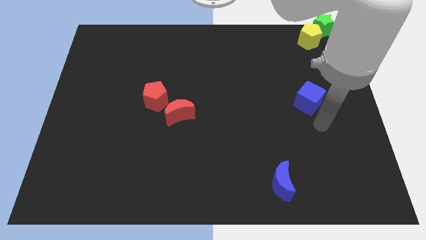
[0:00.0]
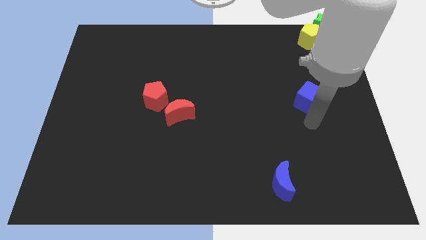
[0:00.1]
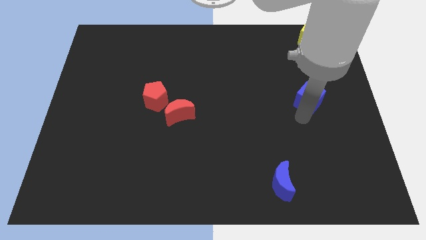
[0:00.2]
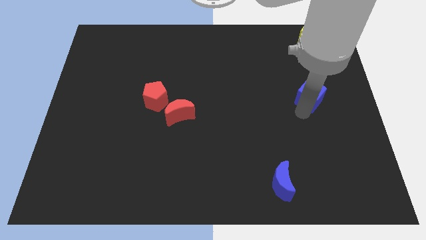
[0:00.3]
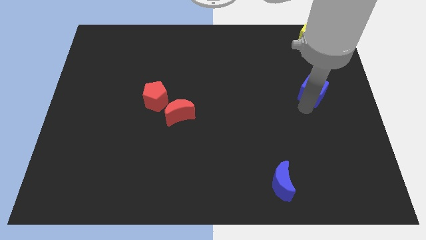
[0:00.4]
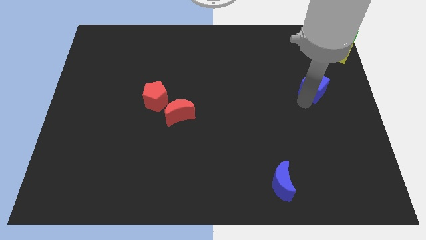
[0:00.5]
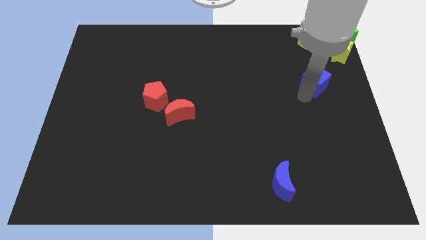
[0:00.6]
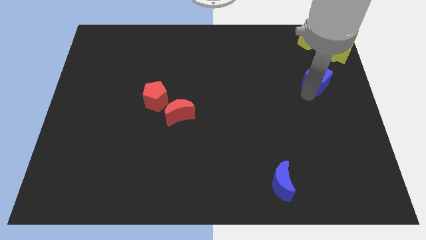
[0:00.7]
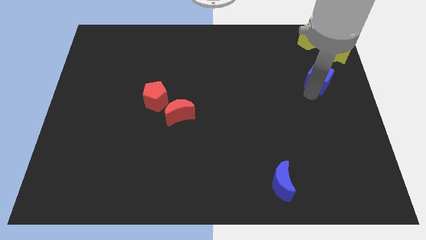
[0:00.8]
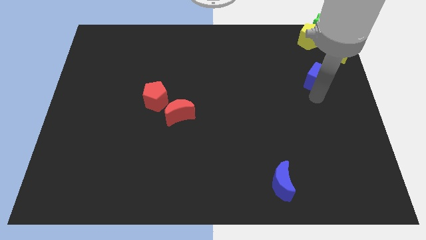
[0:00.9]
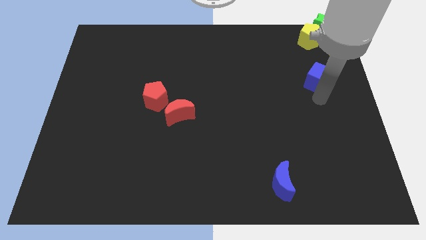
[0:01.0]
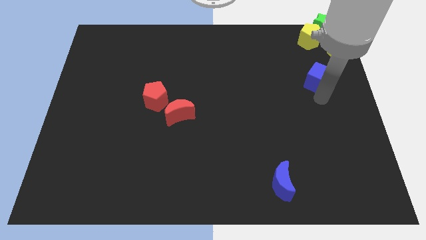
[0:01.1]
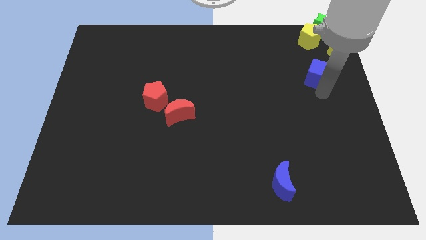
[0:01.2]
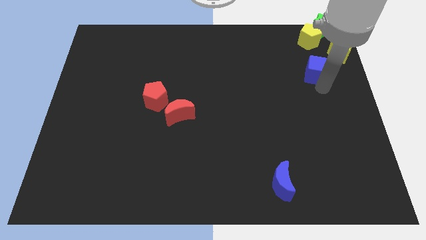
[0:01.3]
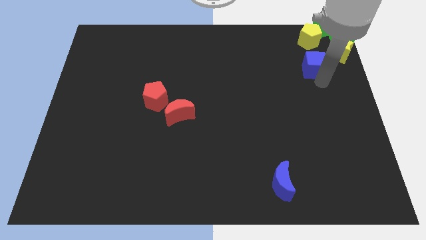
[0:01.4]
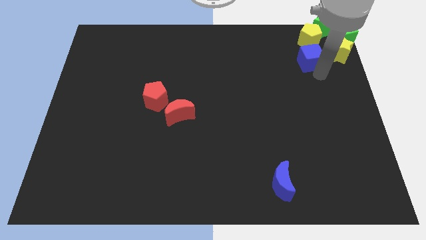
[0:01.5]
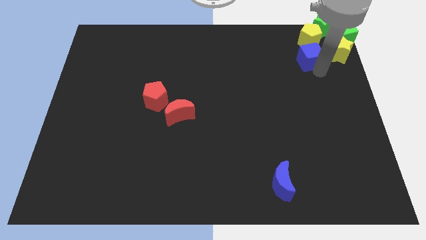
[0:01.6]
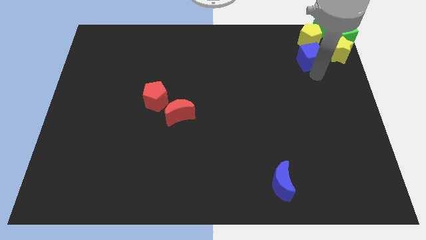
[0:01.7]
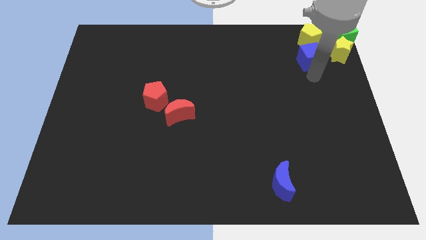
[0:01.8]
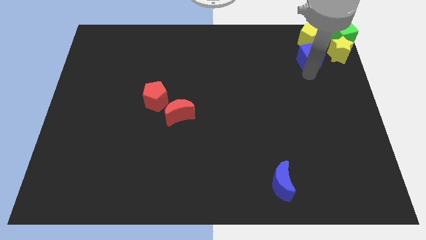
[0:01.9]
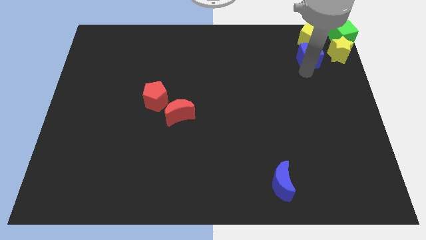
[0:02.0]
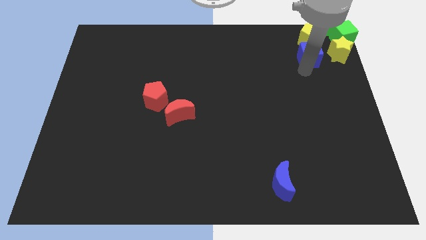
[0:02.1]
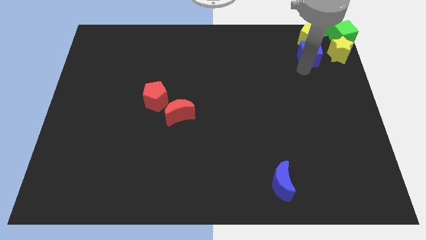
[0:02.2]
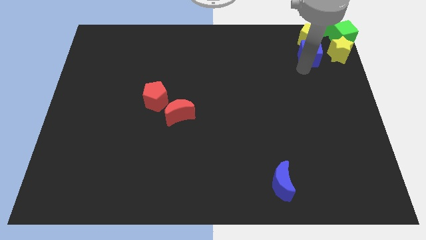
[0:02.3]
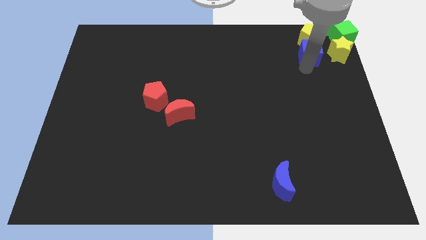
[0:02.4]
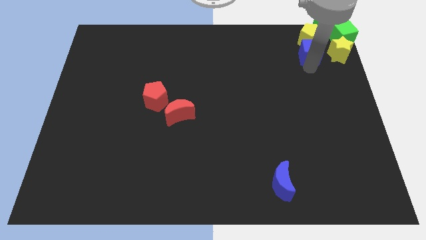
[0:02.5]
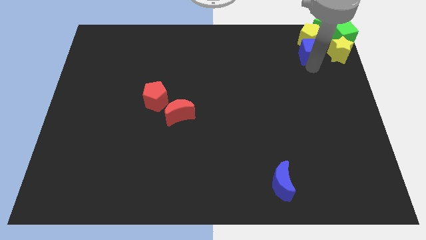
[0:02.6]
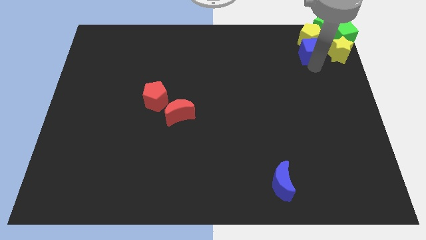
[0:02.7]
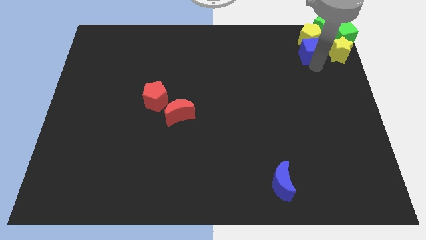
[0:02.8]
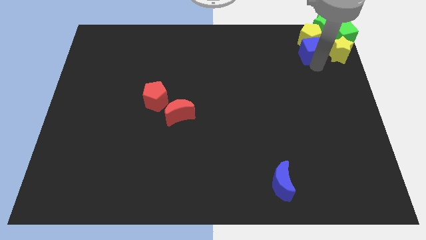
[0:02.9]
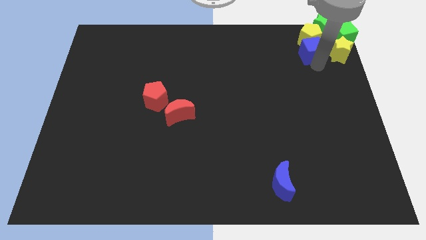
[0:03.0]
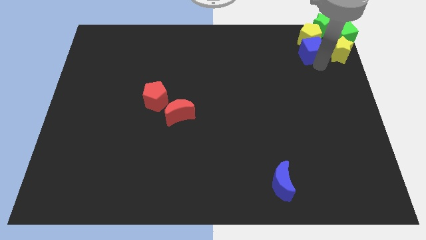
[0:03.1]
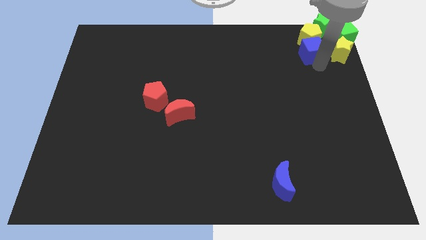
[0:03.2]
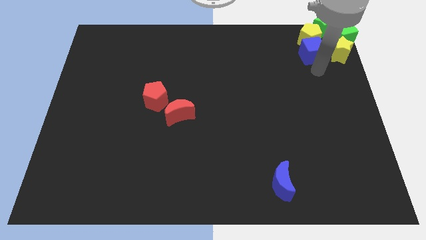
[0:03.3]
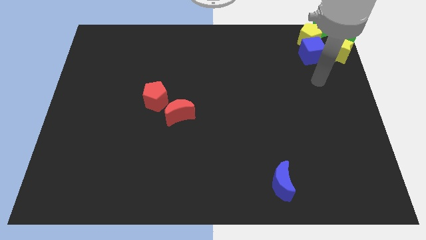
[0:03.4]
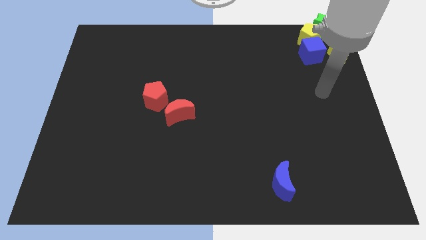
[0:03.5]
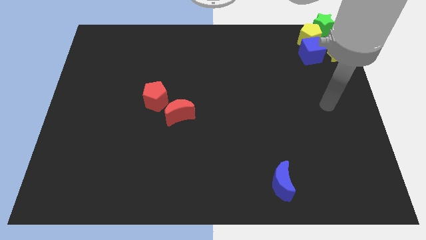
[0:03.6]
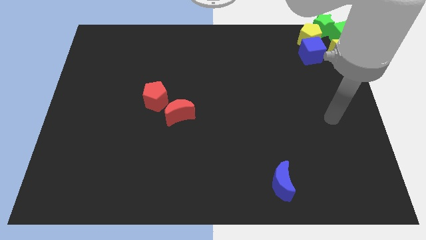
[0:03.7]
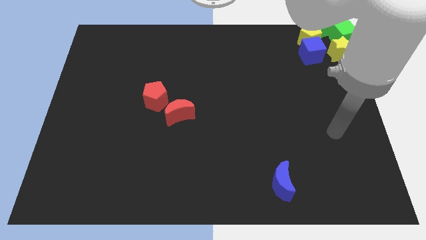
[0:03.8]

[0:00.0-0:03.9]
place the blue cube below yellow pentagon

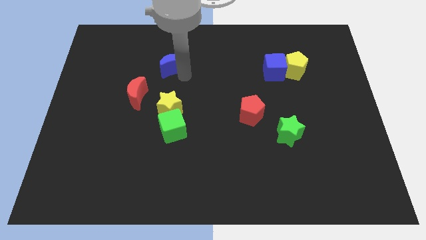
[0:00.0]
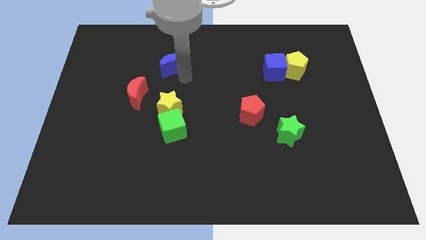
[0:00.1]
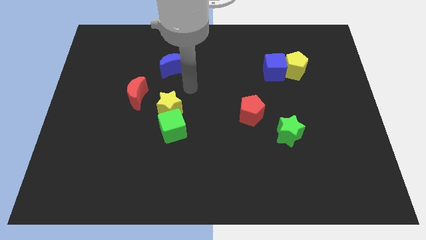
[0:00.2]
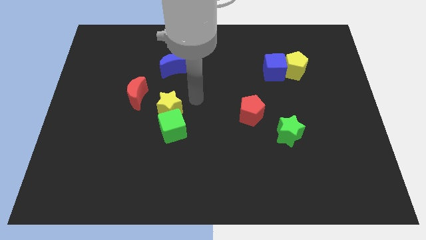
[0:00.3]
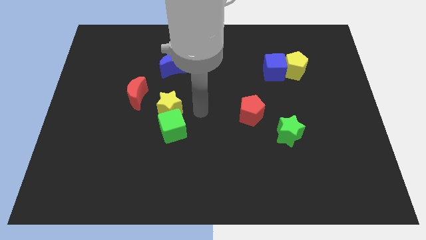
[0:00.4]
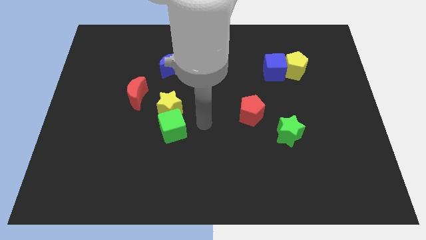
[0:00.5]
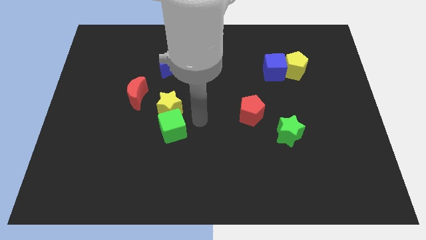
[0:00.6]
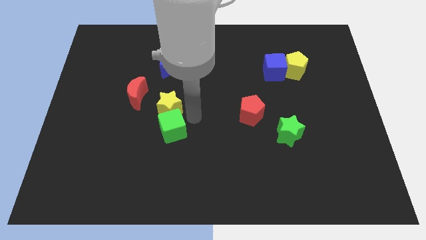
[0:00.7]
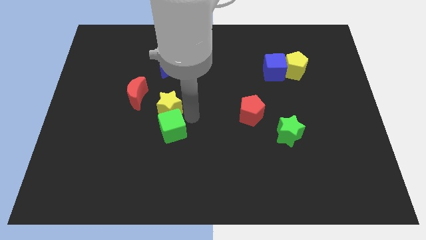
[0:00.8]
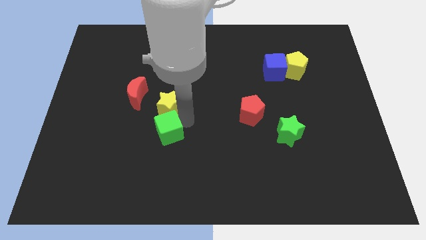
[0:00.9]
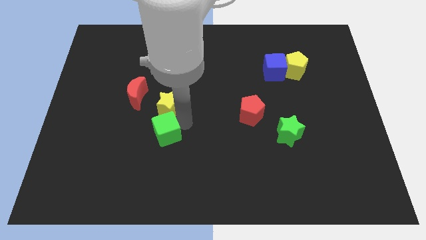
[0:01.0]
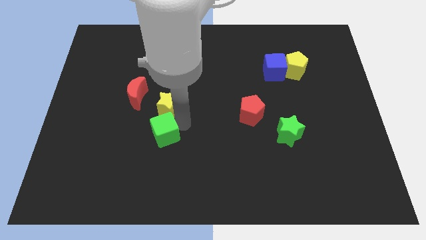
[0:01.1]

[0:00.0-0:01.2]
slightly move the green cube to the left side

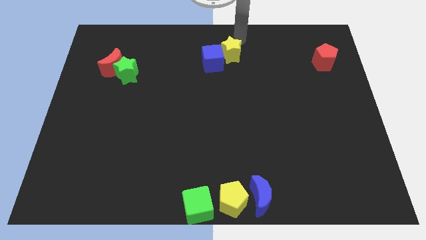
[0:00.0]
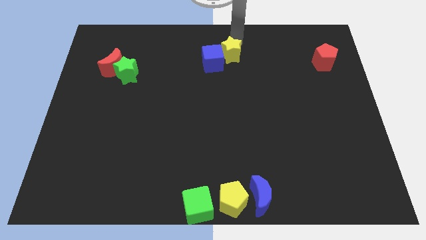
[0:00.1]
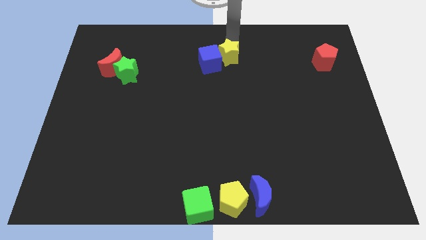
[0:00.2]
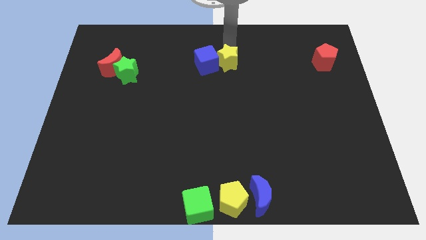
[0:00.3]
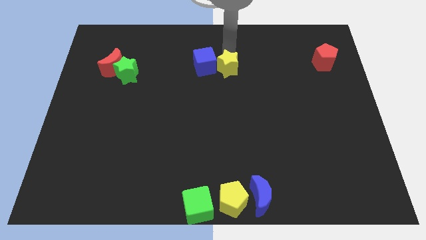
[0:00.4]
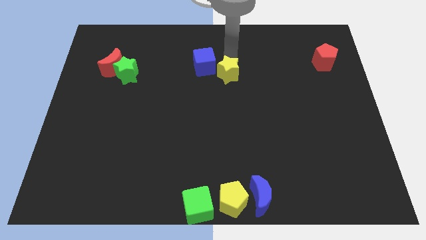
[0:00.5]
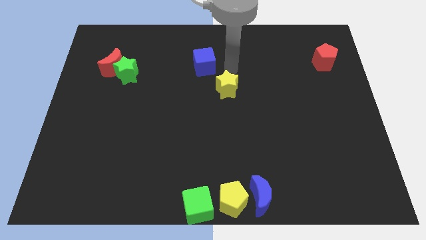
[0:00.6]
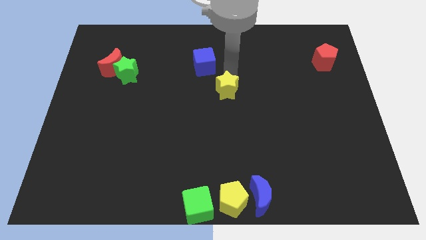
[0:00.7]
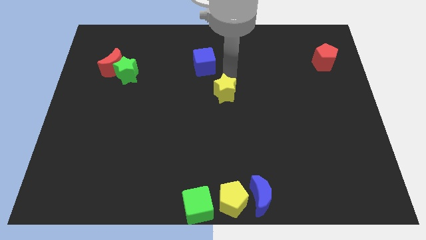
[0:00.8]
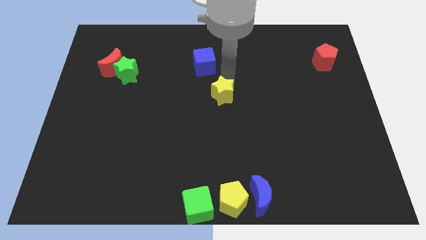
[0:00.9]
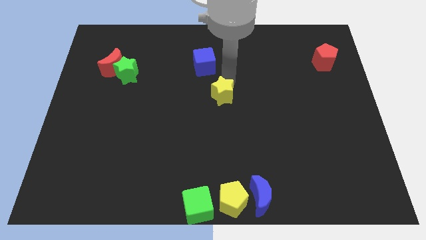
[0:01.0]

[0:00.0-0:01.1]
push the yellow star to the bottom right of the blue cube

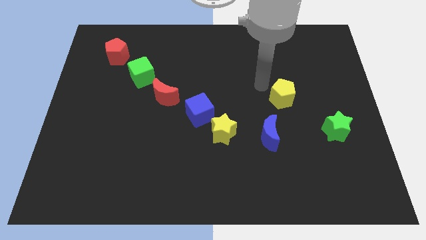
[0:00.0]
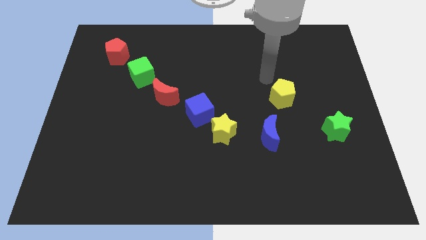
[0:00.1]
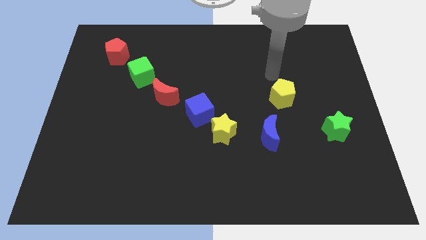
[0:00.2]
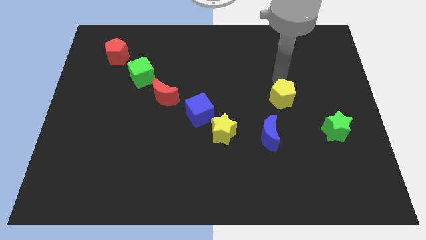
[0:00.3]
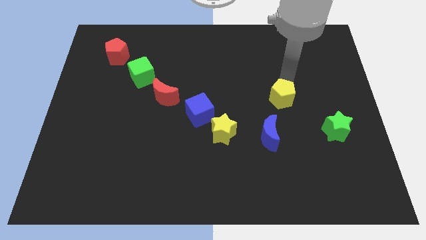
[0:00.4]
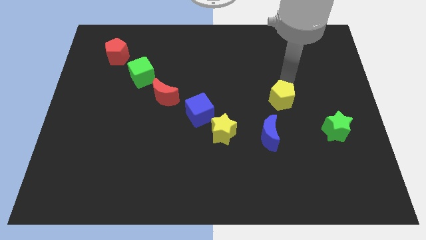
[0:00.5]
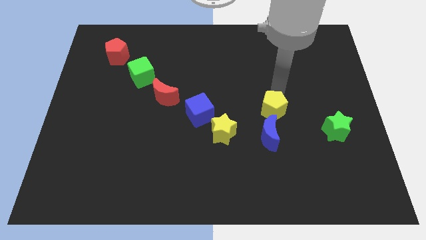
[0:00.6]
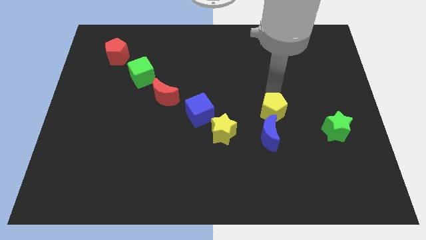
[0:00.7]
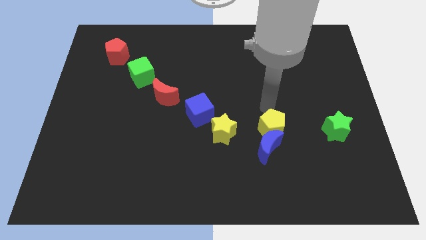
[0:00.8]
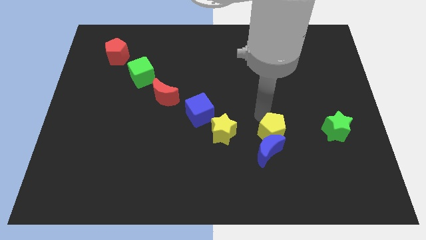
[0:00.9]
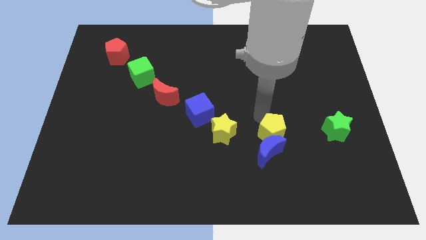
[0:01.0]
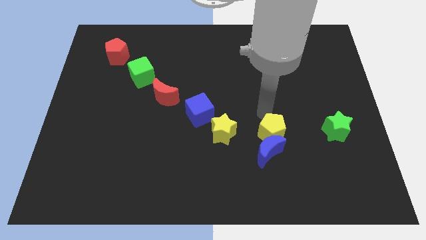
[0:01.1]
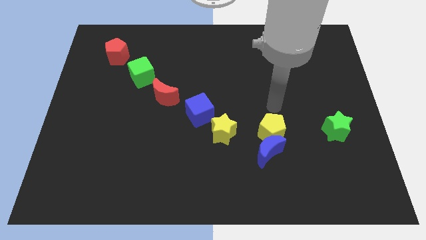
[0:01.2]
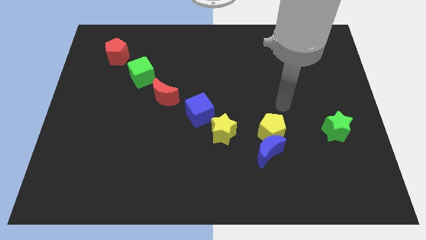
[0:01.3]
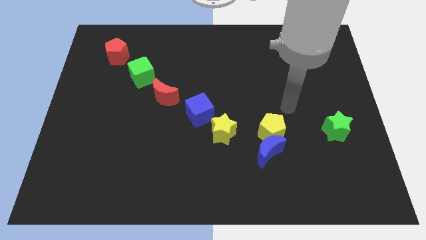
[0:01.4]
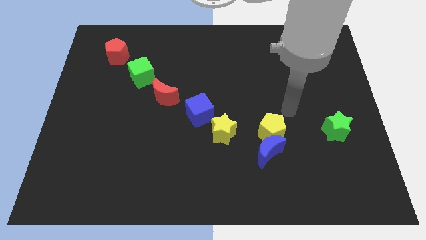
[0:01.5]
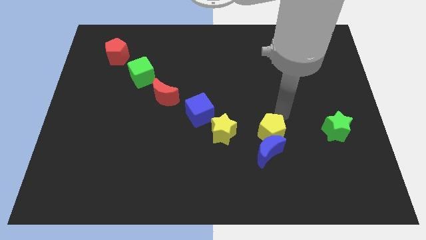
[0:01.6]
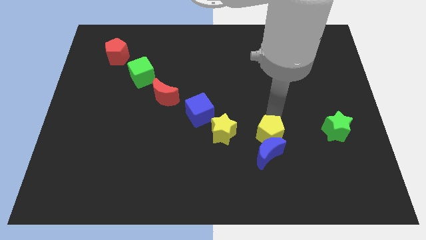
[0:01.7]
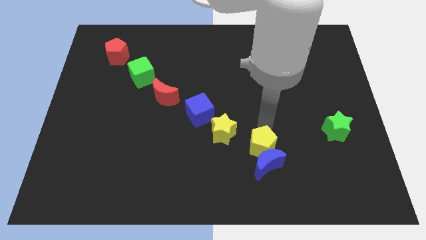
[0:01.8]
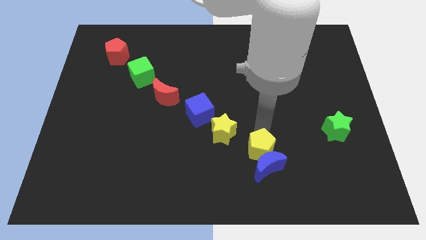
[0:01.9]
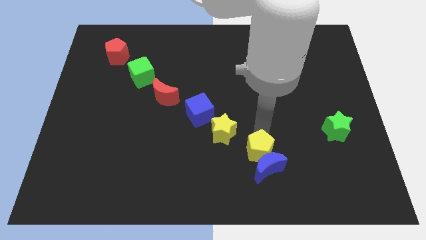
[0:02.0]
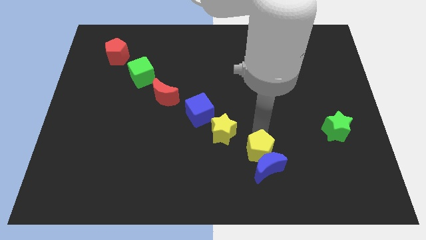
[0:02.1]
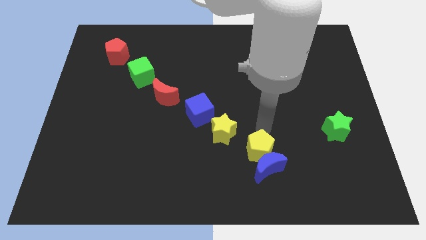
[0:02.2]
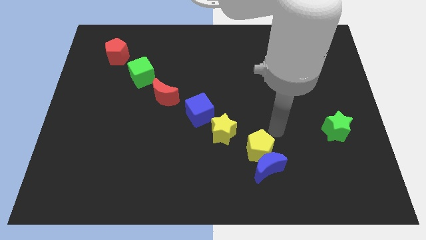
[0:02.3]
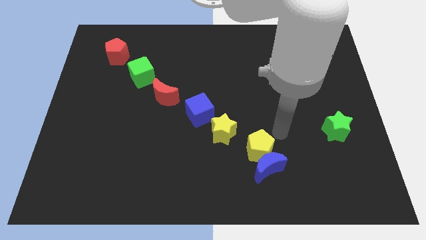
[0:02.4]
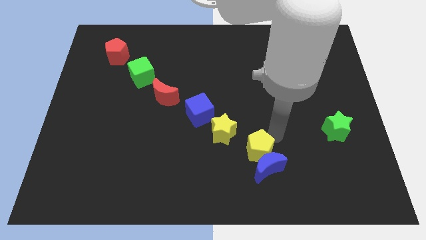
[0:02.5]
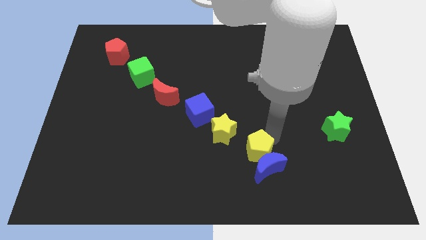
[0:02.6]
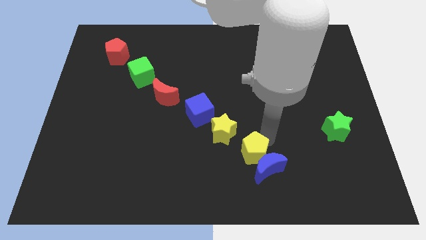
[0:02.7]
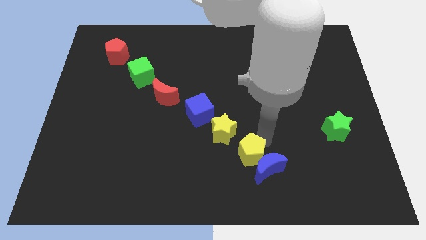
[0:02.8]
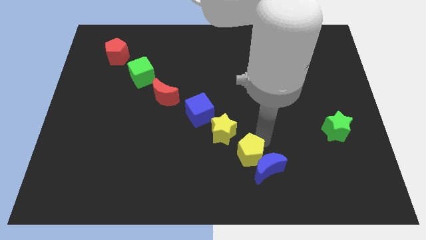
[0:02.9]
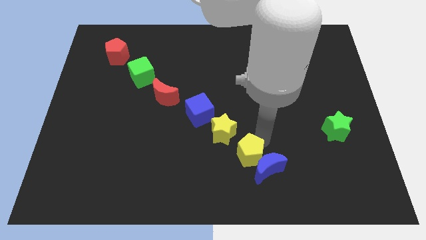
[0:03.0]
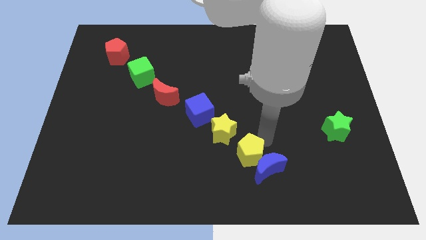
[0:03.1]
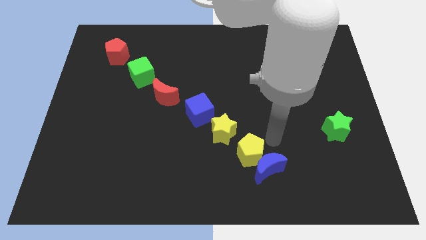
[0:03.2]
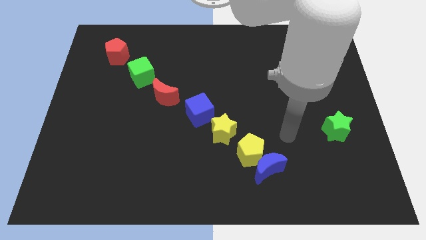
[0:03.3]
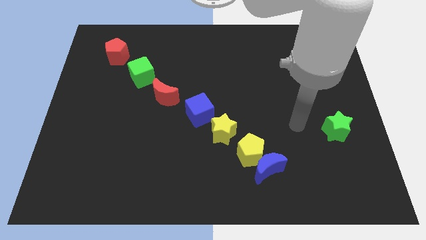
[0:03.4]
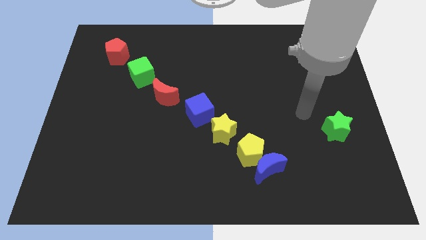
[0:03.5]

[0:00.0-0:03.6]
move the yellow pentagon in between yellow star and blue moon
